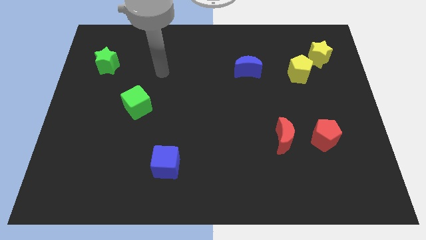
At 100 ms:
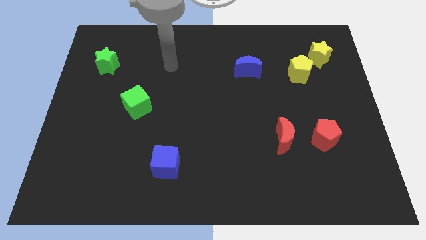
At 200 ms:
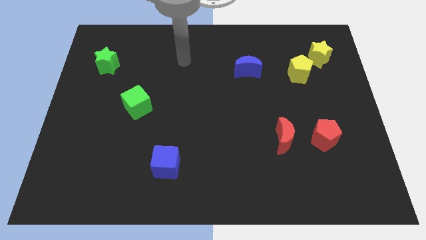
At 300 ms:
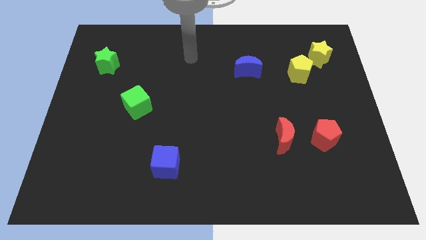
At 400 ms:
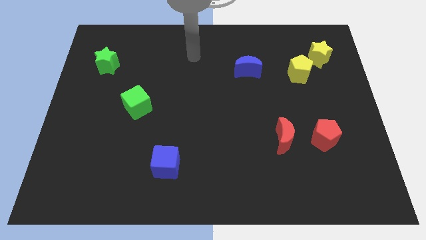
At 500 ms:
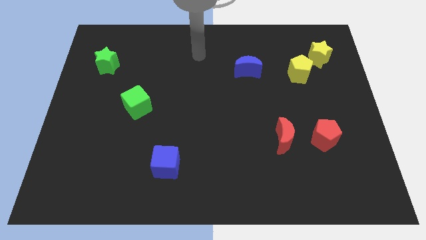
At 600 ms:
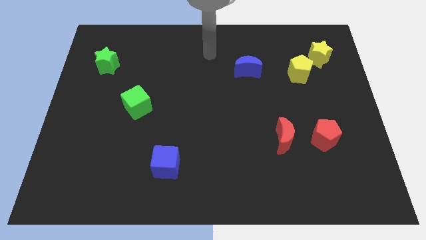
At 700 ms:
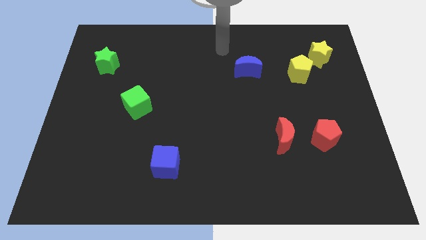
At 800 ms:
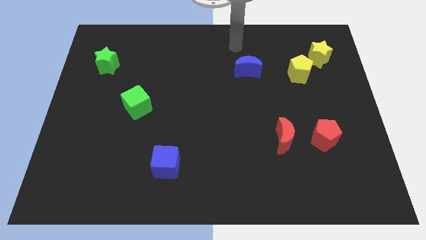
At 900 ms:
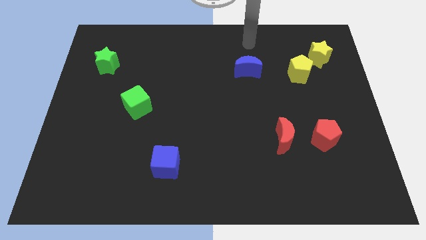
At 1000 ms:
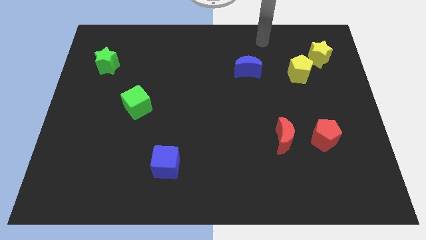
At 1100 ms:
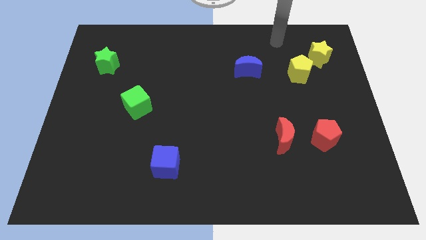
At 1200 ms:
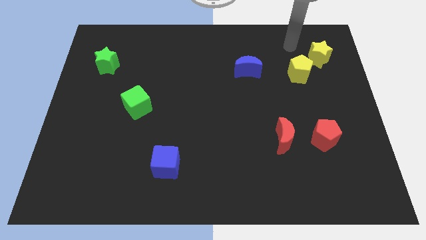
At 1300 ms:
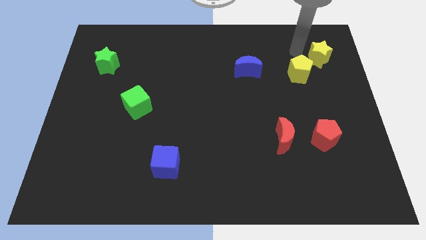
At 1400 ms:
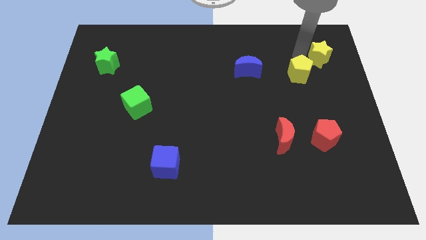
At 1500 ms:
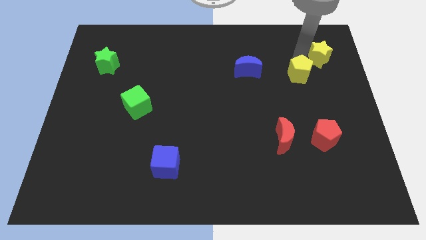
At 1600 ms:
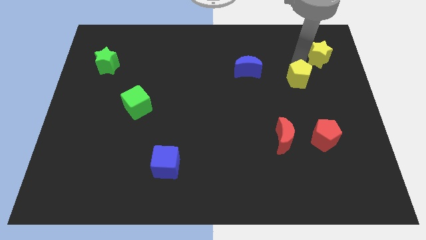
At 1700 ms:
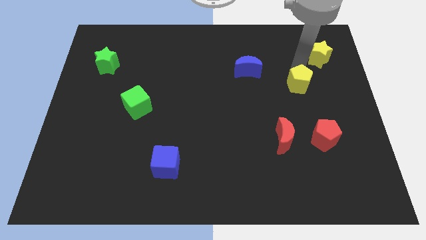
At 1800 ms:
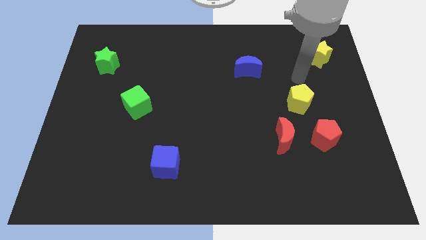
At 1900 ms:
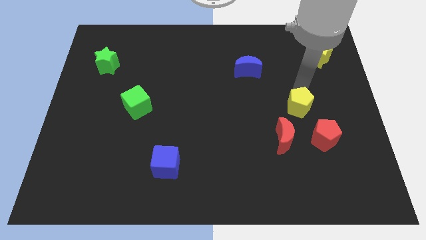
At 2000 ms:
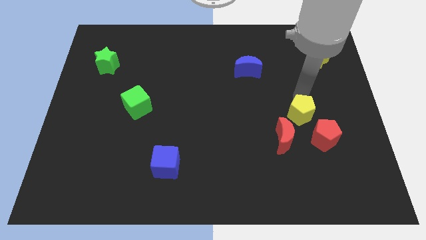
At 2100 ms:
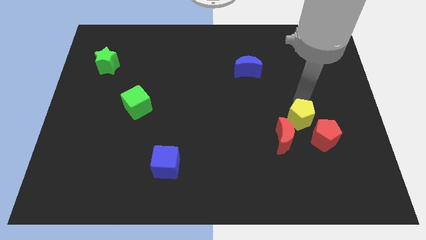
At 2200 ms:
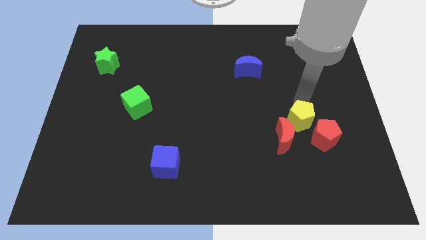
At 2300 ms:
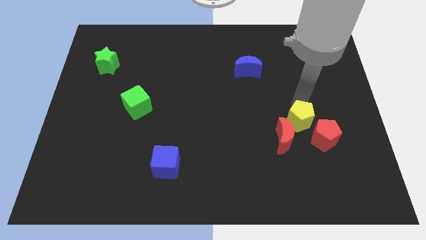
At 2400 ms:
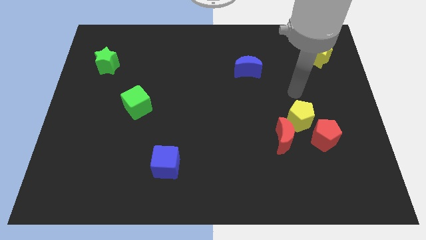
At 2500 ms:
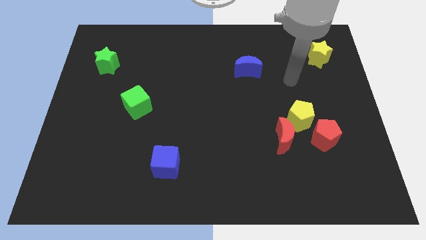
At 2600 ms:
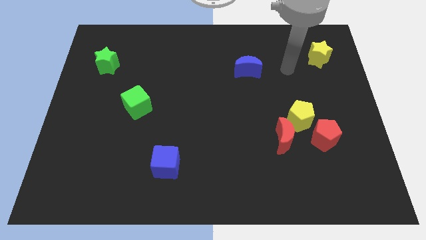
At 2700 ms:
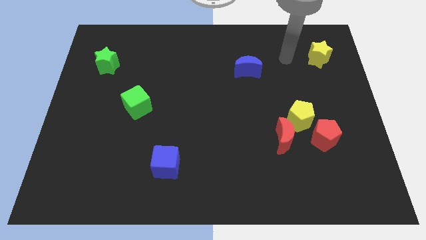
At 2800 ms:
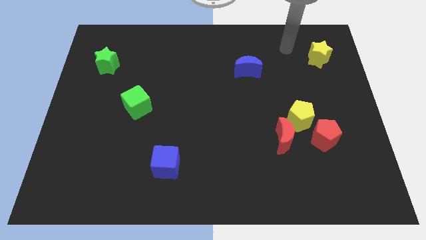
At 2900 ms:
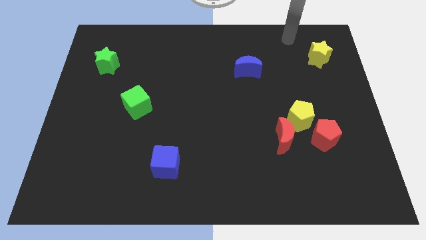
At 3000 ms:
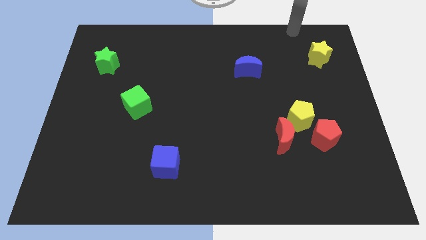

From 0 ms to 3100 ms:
push the yellow pentagon close to the red moon and red pentagon

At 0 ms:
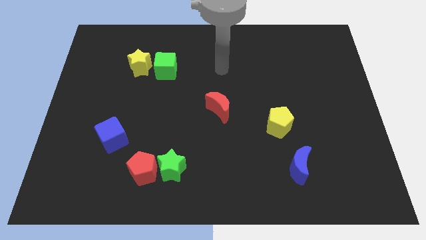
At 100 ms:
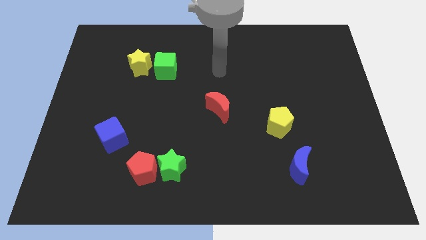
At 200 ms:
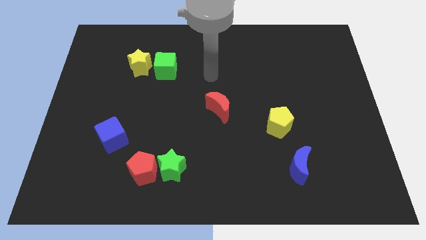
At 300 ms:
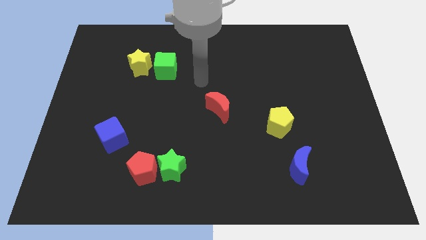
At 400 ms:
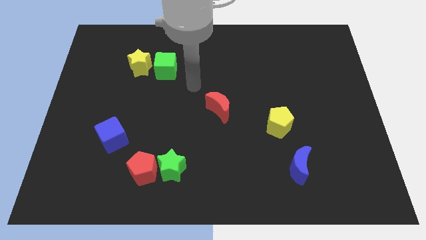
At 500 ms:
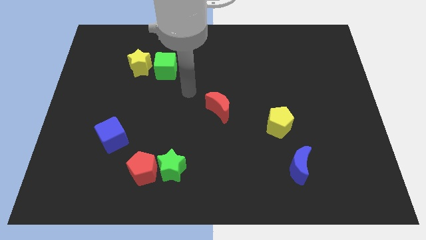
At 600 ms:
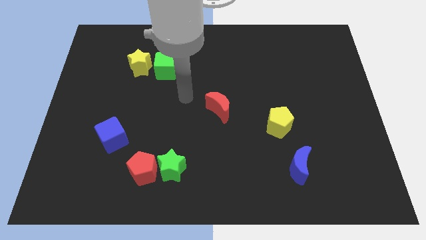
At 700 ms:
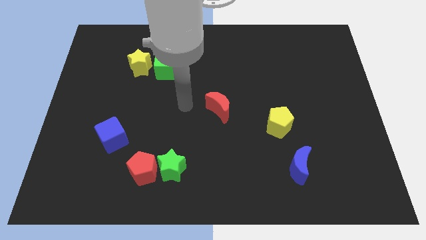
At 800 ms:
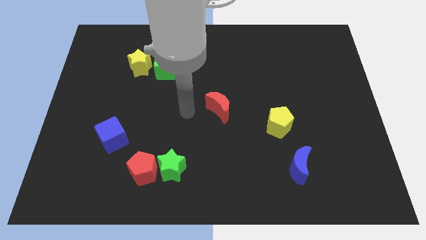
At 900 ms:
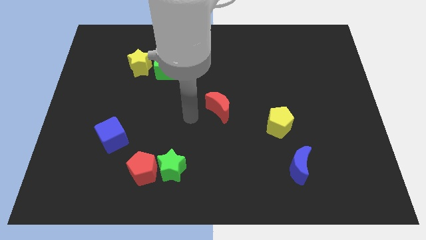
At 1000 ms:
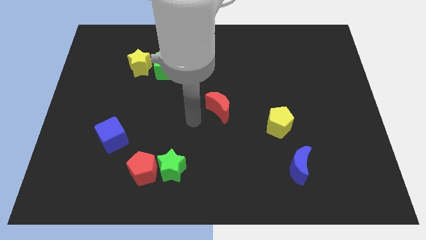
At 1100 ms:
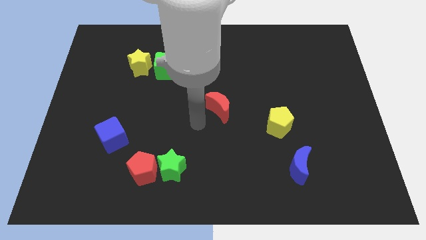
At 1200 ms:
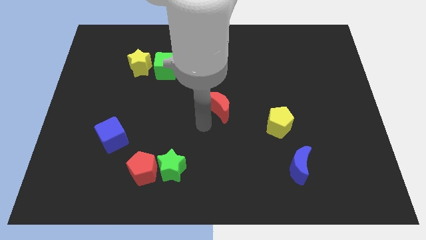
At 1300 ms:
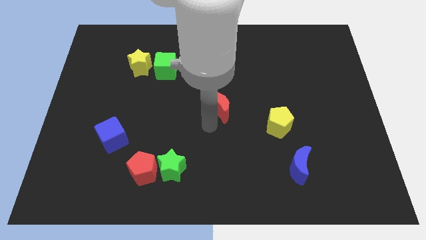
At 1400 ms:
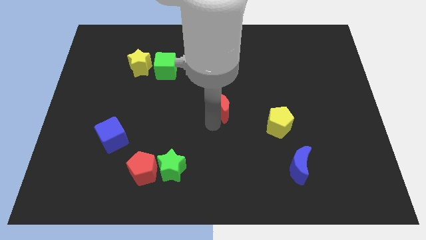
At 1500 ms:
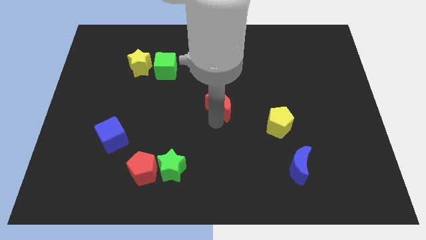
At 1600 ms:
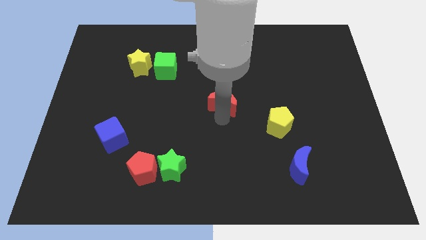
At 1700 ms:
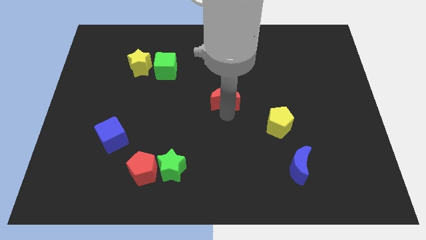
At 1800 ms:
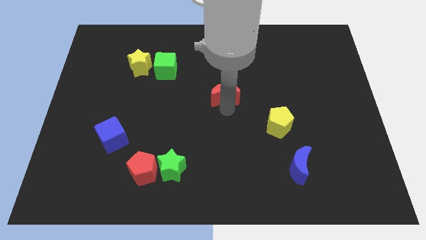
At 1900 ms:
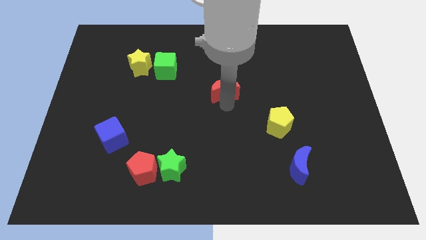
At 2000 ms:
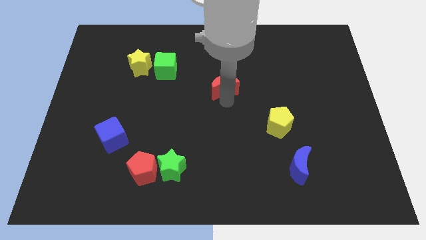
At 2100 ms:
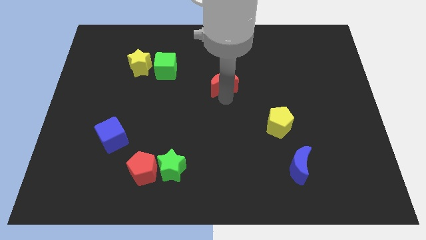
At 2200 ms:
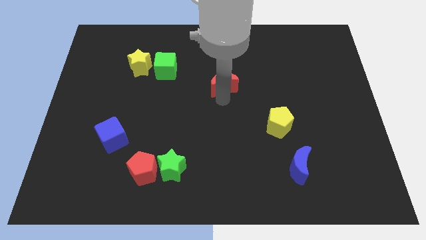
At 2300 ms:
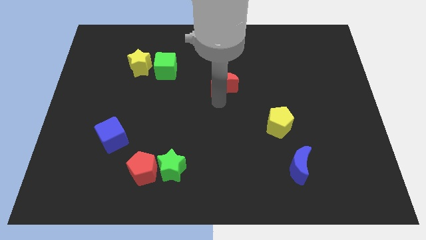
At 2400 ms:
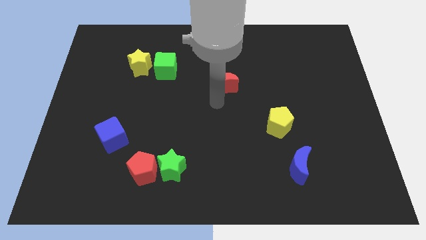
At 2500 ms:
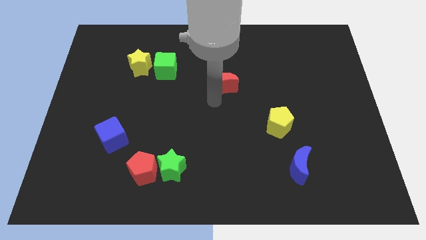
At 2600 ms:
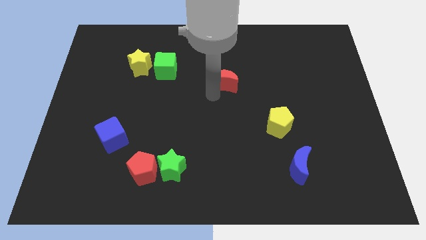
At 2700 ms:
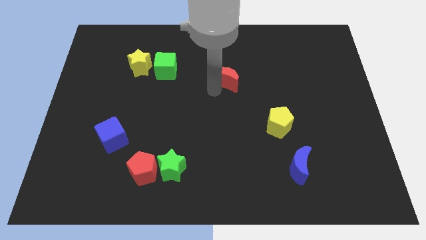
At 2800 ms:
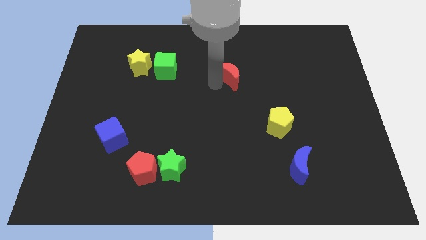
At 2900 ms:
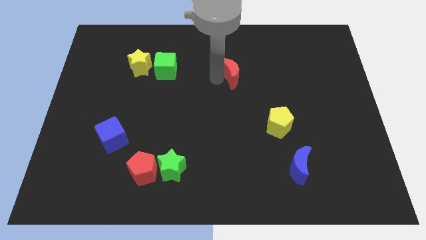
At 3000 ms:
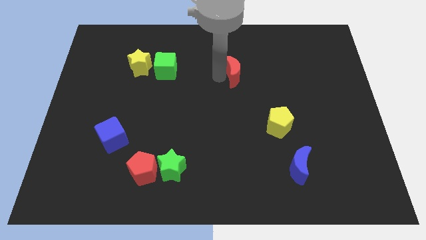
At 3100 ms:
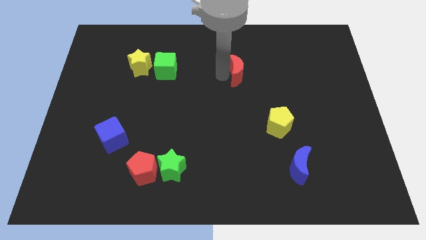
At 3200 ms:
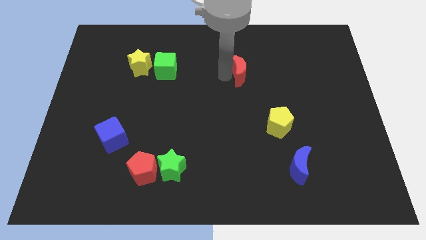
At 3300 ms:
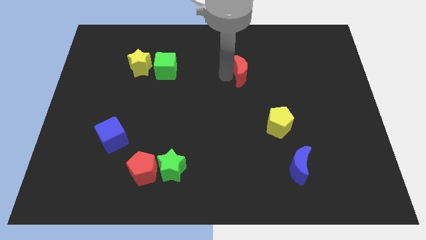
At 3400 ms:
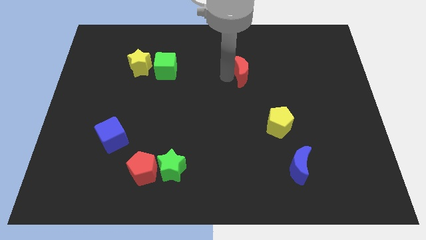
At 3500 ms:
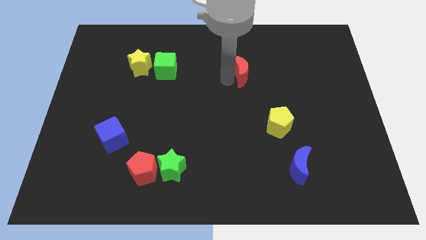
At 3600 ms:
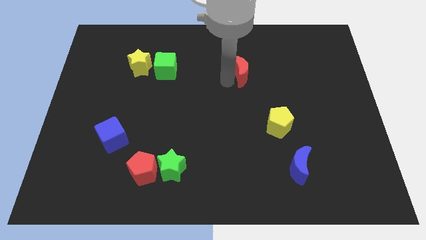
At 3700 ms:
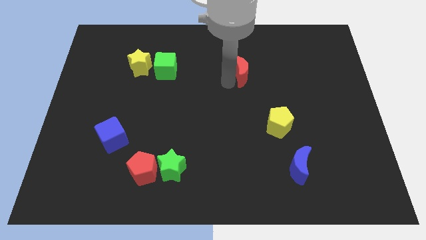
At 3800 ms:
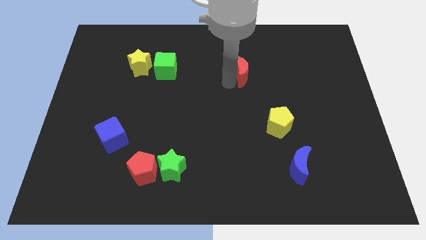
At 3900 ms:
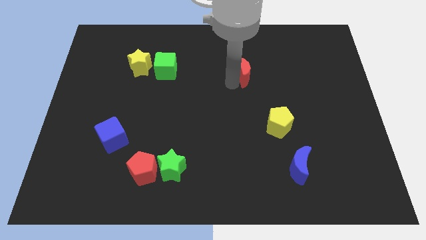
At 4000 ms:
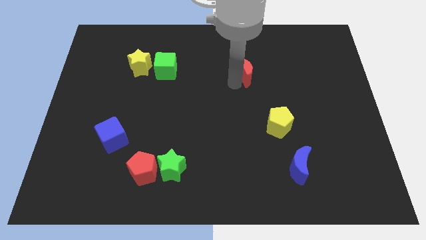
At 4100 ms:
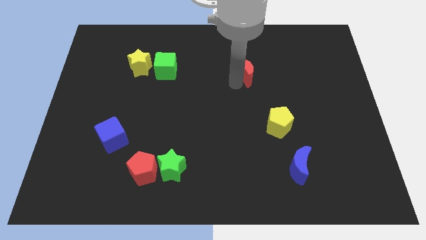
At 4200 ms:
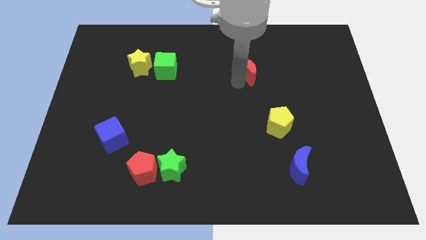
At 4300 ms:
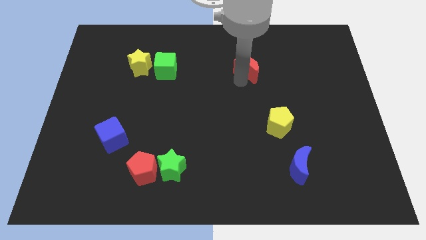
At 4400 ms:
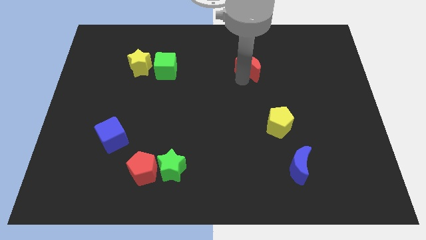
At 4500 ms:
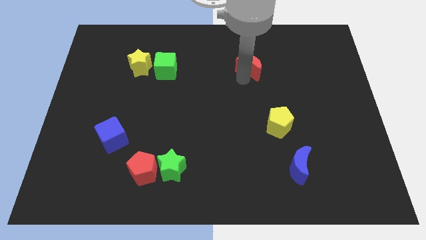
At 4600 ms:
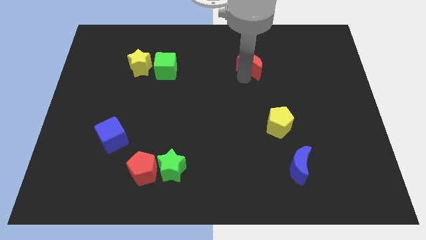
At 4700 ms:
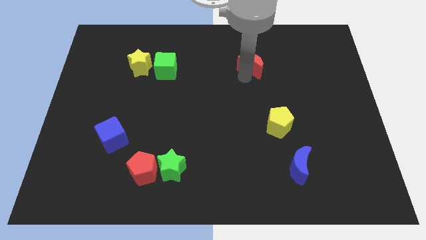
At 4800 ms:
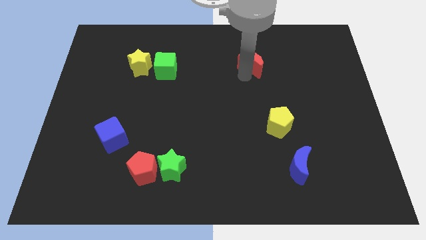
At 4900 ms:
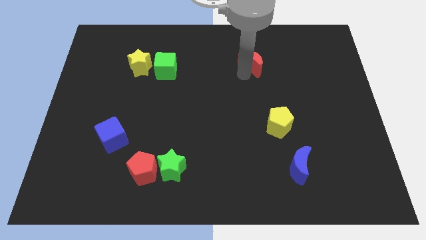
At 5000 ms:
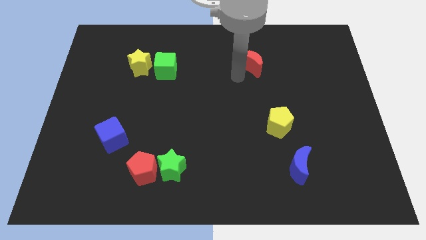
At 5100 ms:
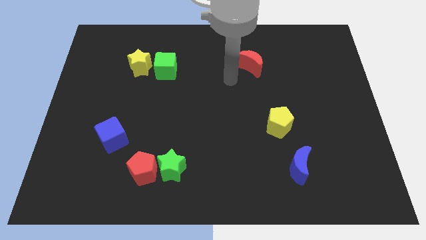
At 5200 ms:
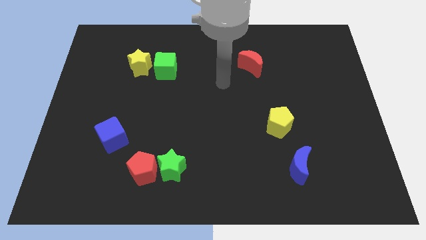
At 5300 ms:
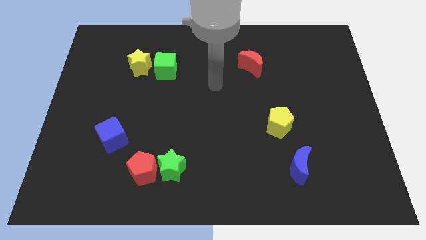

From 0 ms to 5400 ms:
put the red moon at the right side of the green cube

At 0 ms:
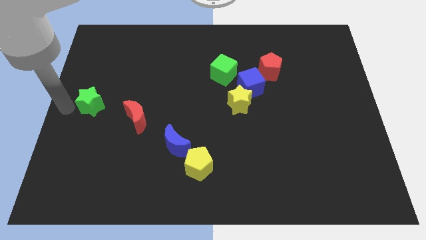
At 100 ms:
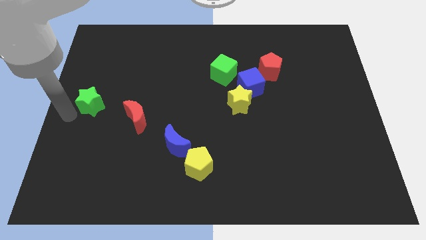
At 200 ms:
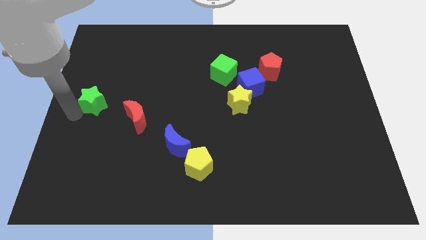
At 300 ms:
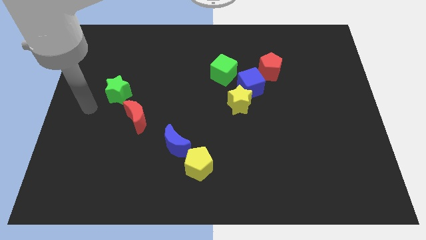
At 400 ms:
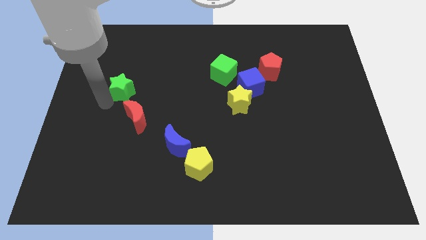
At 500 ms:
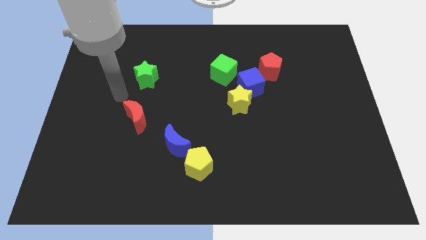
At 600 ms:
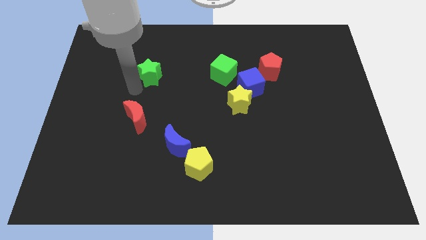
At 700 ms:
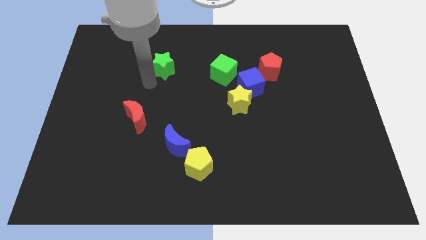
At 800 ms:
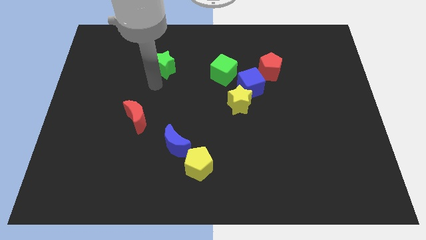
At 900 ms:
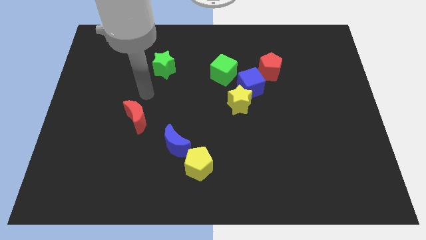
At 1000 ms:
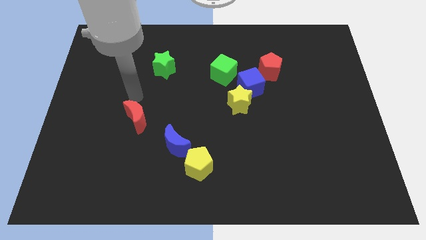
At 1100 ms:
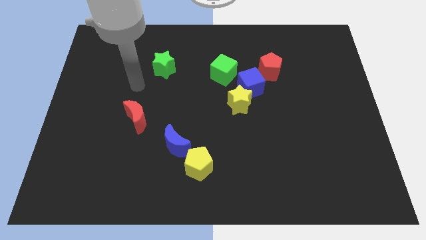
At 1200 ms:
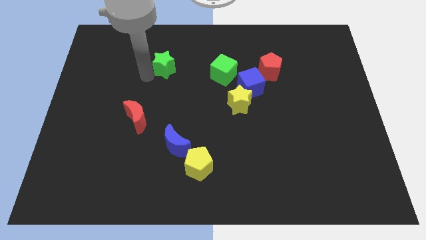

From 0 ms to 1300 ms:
push the green star parallel to the left of the green cube
